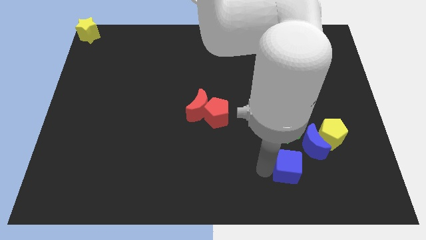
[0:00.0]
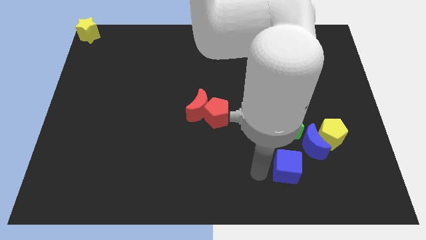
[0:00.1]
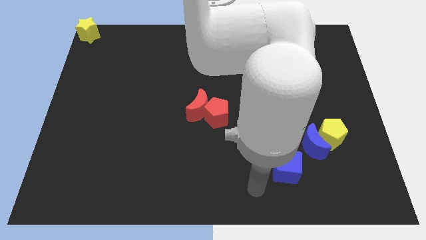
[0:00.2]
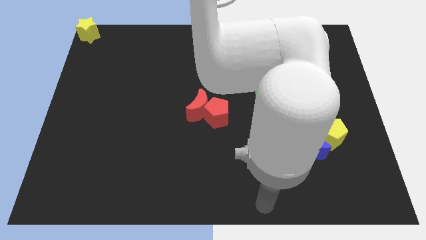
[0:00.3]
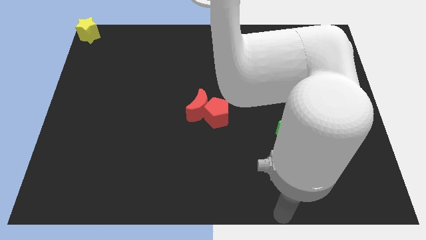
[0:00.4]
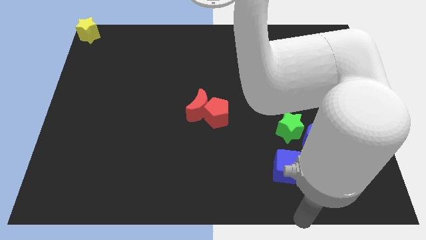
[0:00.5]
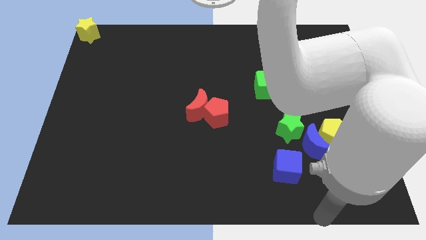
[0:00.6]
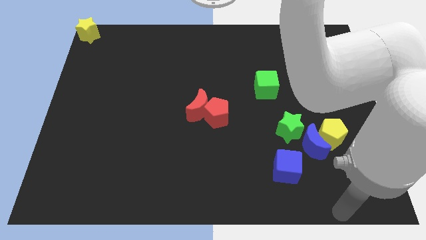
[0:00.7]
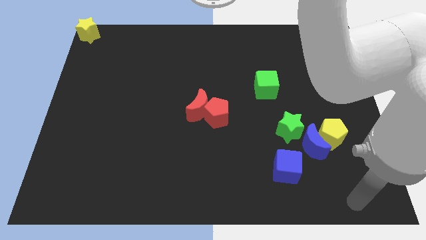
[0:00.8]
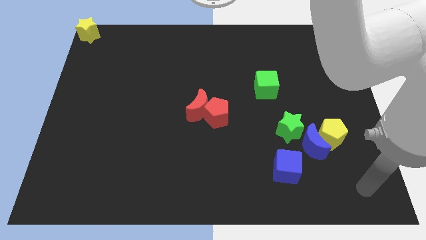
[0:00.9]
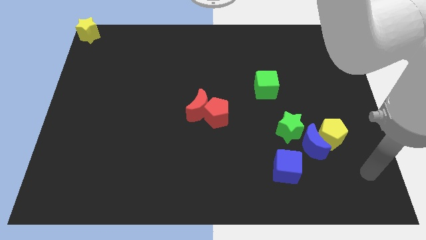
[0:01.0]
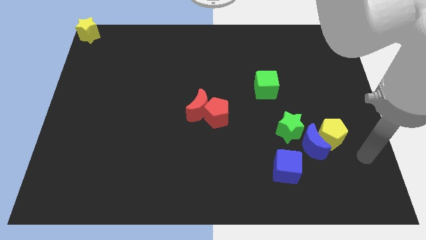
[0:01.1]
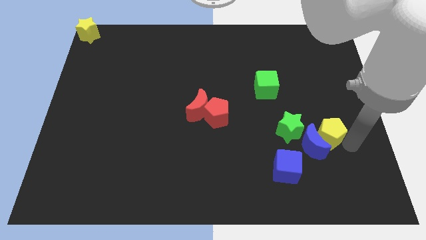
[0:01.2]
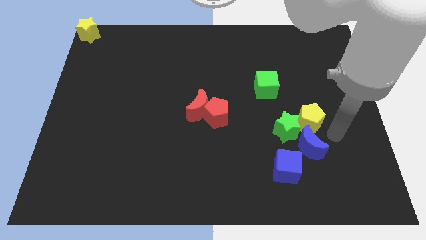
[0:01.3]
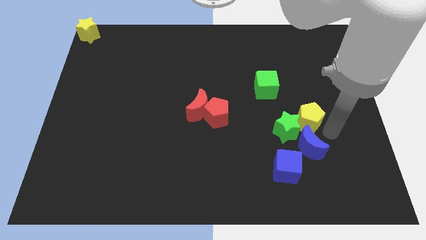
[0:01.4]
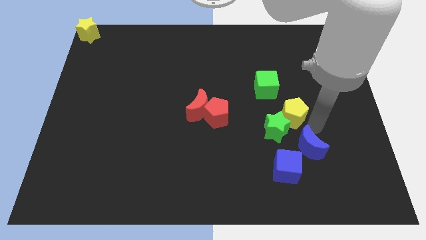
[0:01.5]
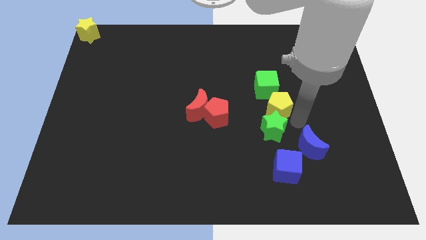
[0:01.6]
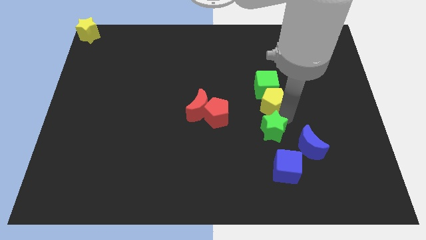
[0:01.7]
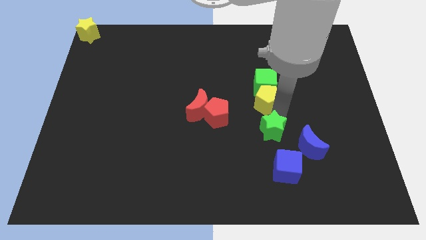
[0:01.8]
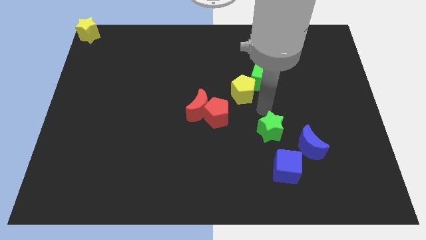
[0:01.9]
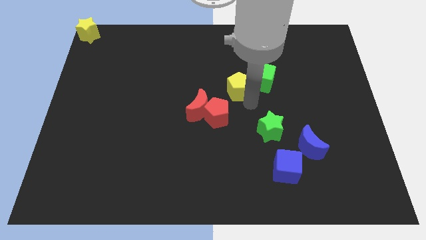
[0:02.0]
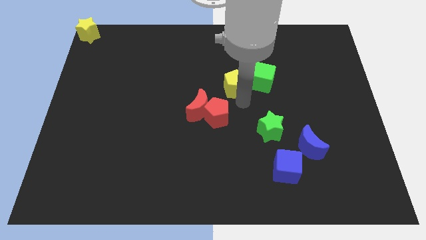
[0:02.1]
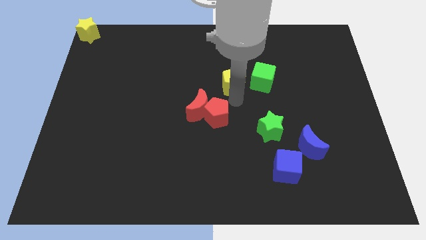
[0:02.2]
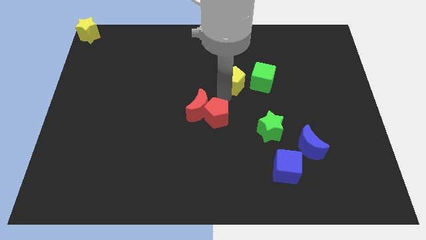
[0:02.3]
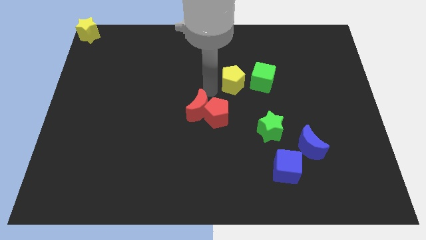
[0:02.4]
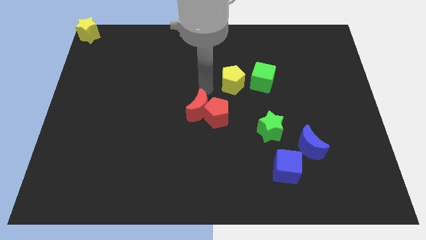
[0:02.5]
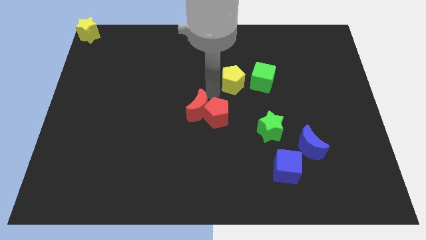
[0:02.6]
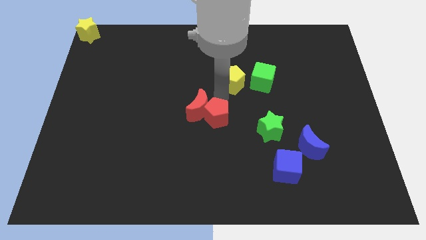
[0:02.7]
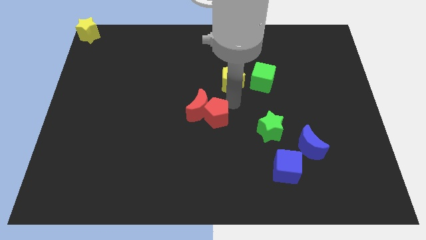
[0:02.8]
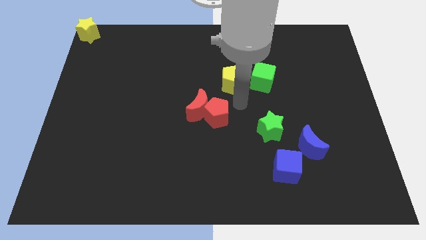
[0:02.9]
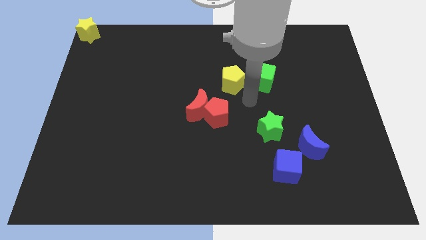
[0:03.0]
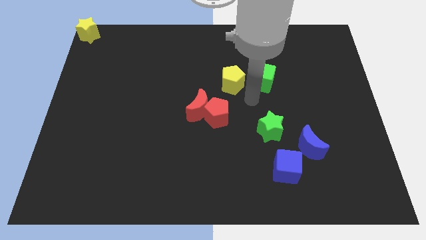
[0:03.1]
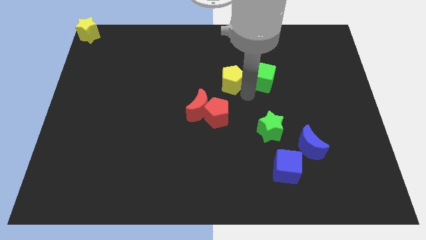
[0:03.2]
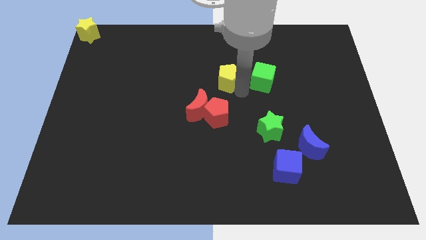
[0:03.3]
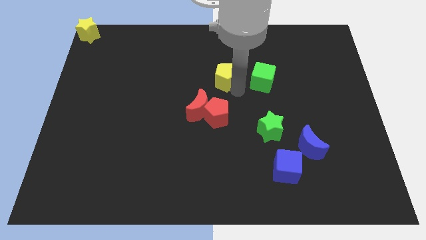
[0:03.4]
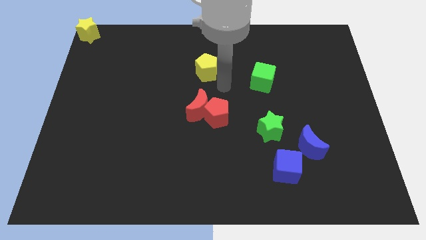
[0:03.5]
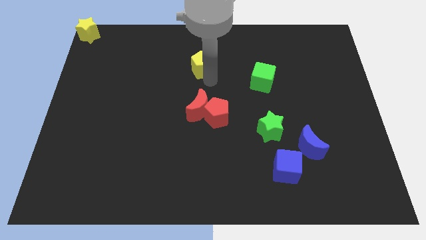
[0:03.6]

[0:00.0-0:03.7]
move the yellow pentagon towards the top center of the board

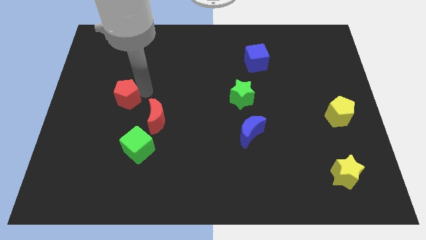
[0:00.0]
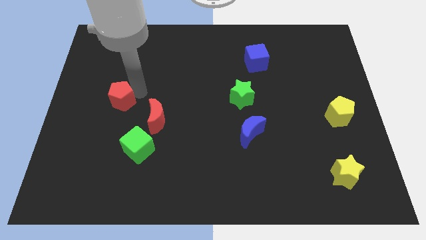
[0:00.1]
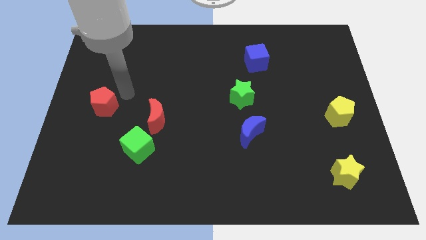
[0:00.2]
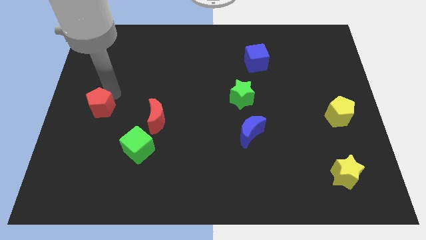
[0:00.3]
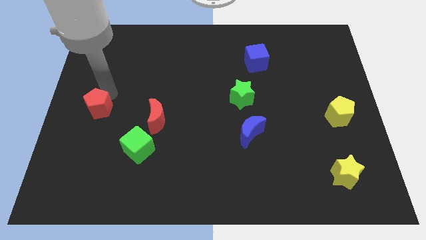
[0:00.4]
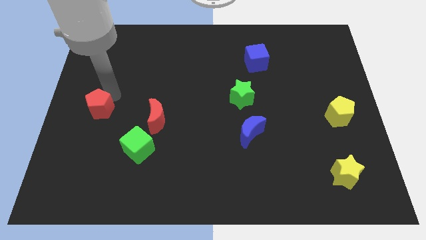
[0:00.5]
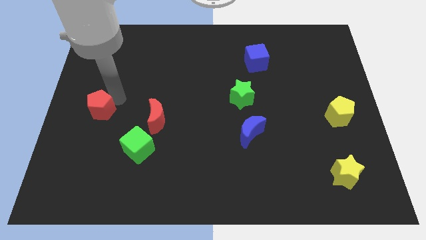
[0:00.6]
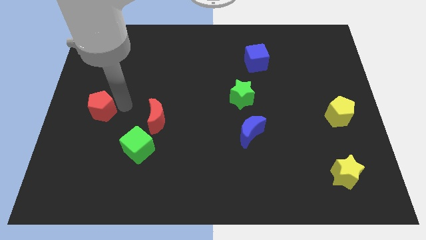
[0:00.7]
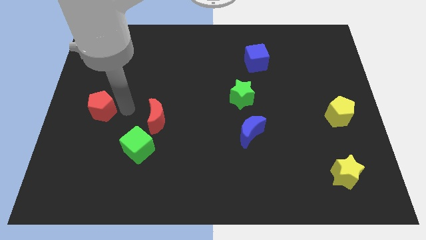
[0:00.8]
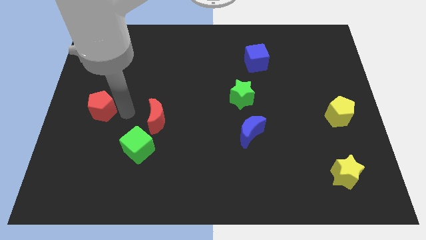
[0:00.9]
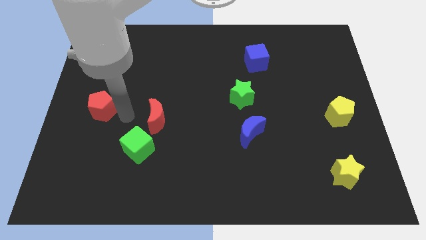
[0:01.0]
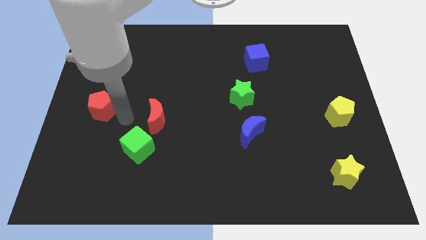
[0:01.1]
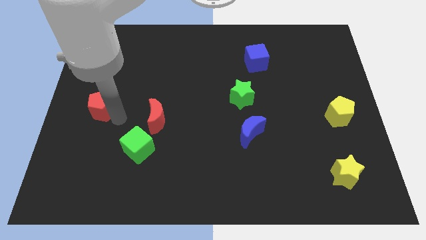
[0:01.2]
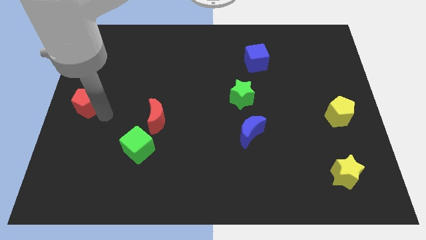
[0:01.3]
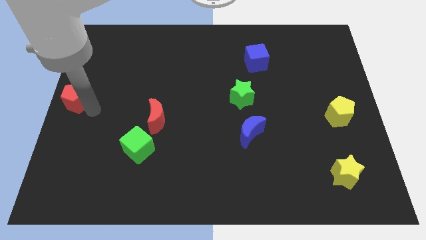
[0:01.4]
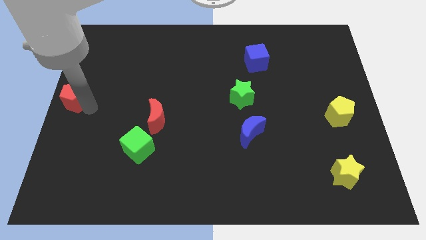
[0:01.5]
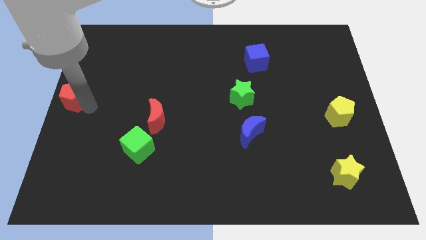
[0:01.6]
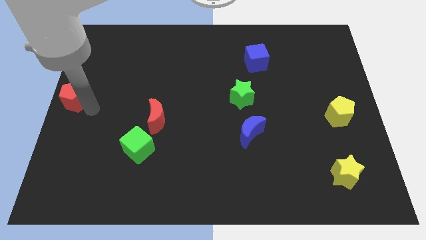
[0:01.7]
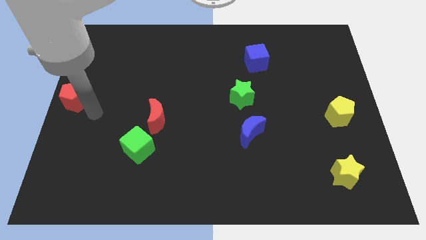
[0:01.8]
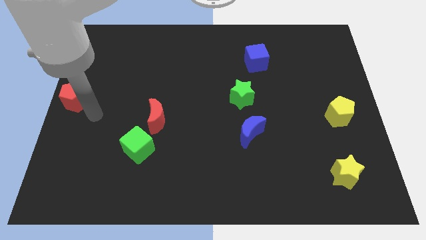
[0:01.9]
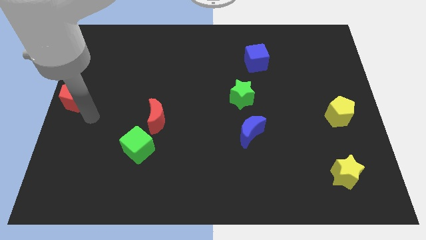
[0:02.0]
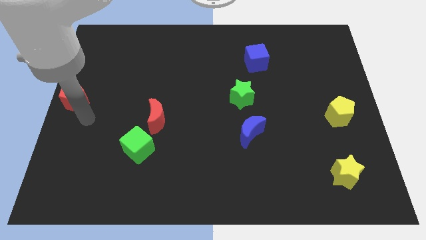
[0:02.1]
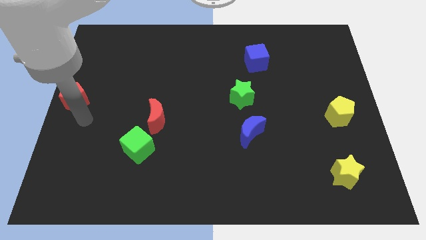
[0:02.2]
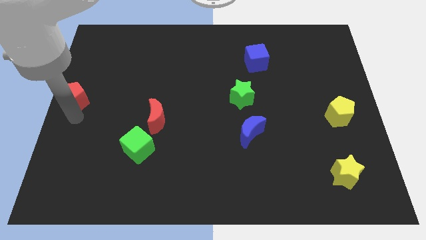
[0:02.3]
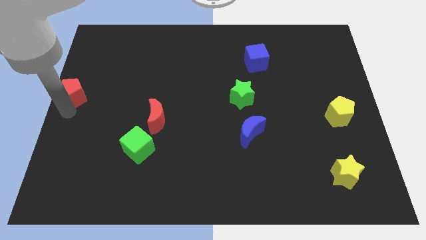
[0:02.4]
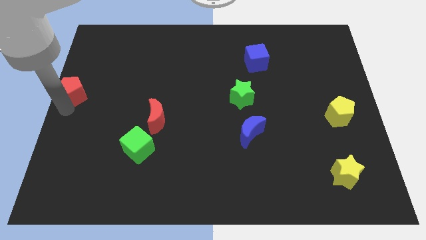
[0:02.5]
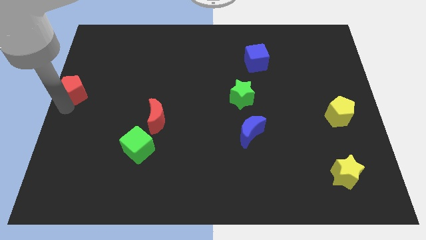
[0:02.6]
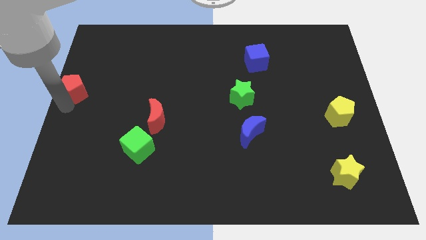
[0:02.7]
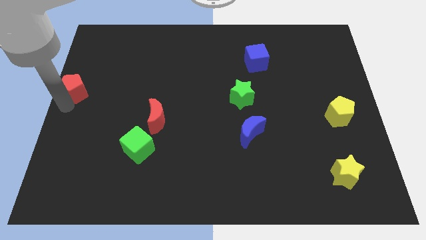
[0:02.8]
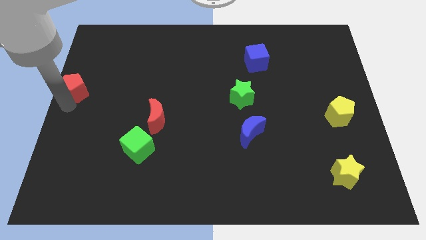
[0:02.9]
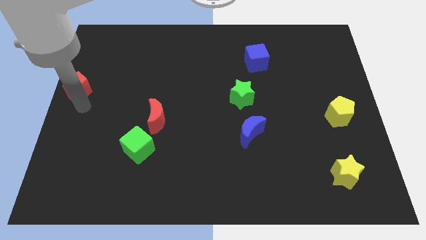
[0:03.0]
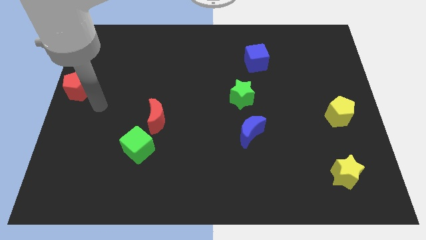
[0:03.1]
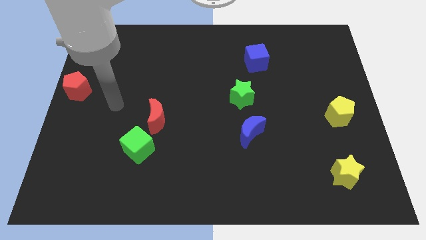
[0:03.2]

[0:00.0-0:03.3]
slide the red pentagon to the left side of the table

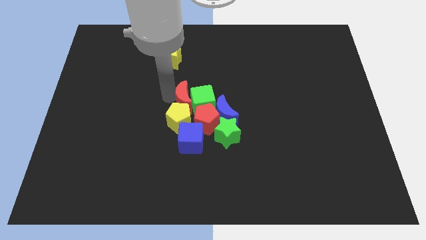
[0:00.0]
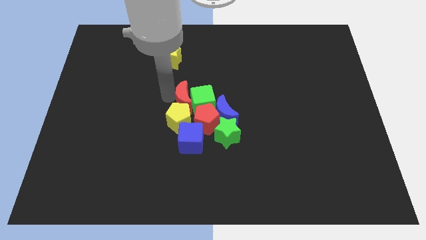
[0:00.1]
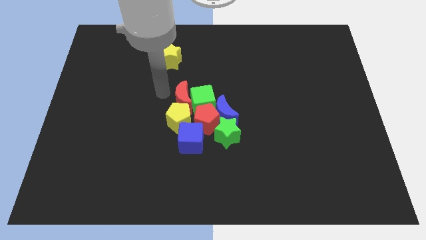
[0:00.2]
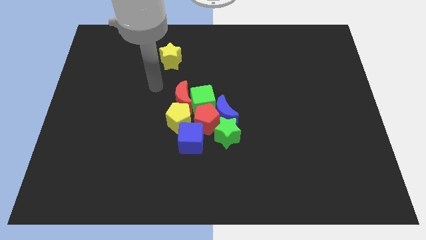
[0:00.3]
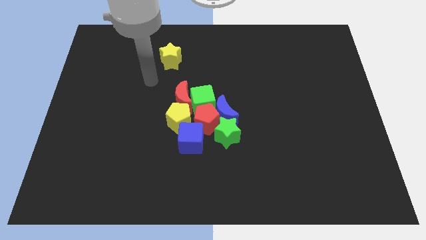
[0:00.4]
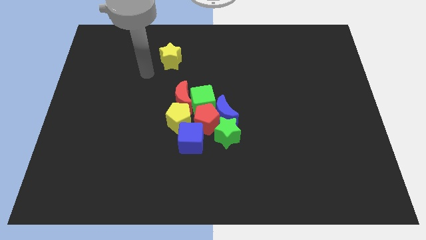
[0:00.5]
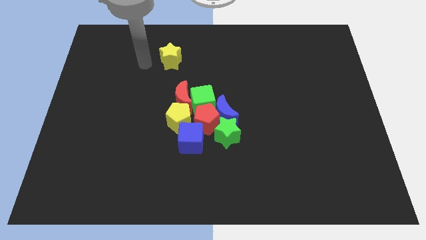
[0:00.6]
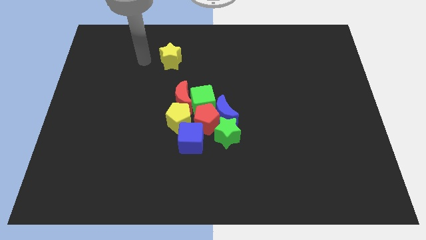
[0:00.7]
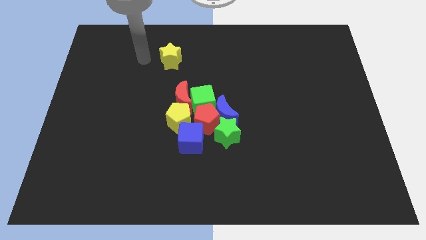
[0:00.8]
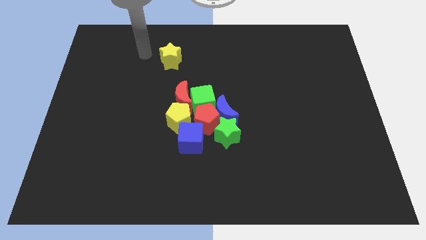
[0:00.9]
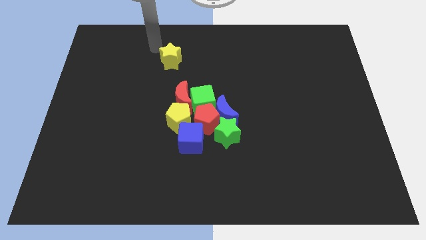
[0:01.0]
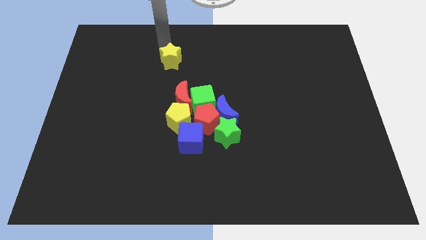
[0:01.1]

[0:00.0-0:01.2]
move your arm closer to the yellow star

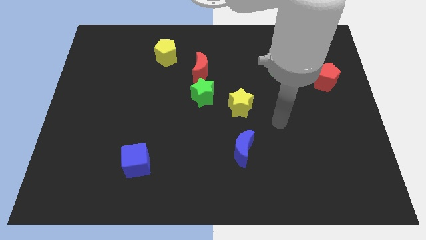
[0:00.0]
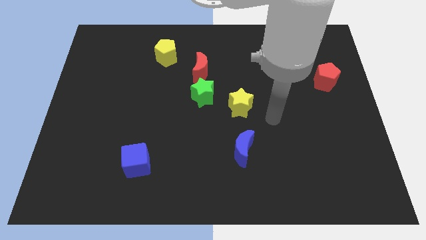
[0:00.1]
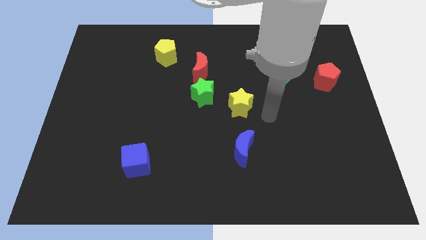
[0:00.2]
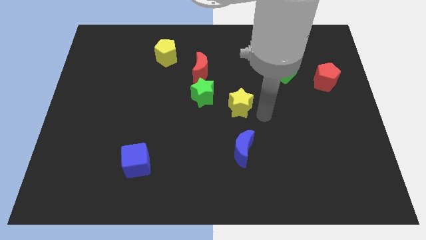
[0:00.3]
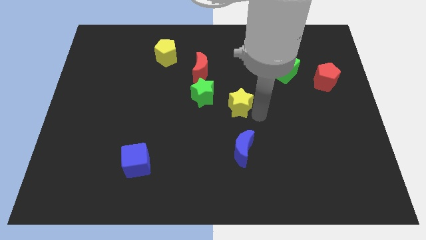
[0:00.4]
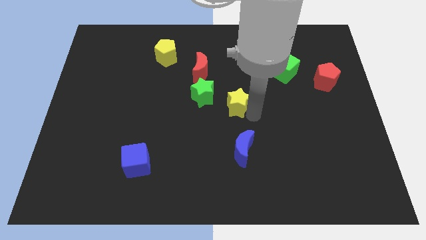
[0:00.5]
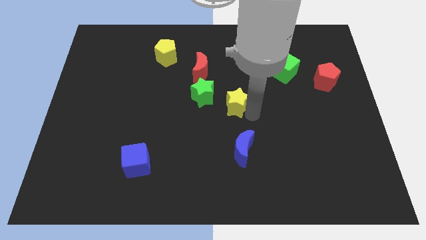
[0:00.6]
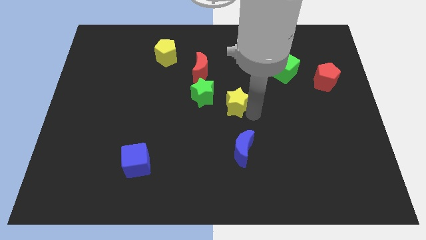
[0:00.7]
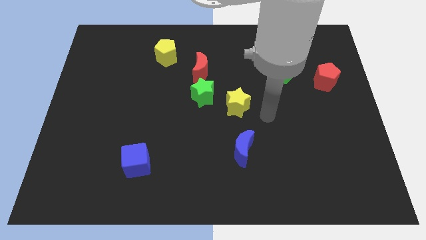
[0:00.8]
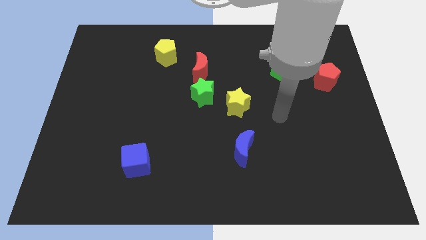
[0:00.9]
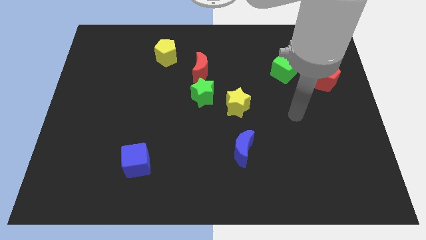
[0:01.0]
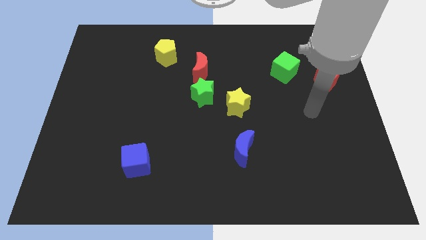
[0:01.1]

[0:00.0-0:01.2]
move the yellow star slightly to the left
